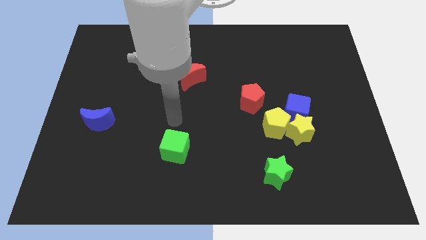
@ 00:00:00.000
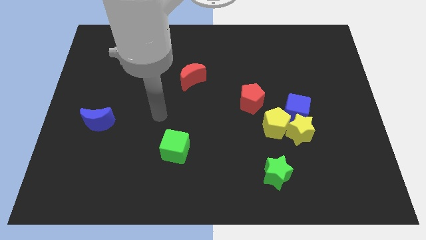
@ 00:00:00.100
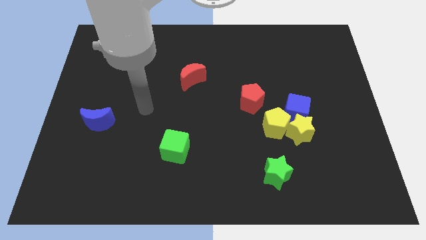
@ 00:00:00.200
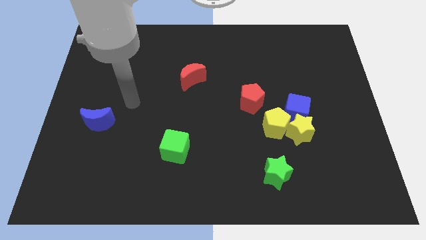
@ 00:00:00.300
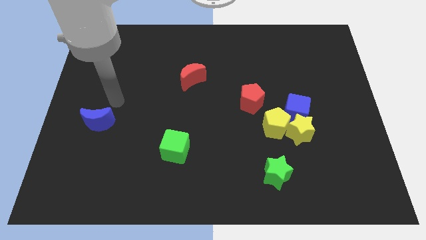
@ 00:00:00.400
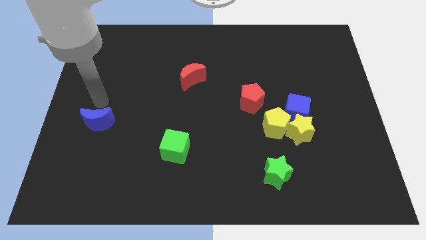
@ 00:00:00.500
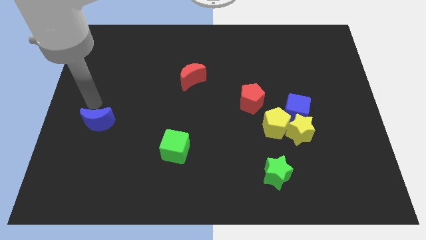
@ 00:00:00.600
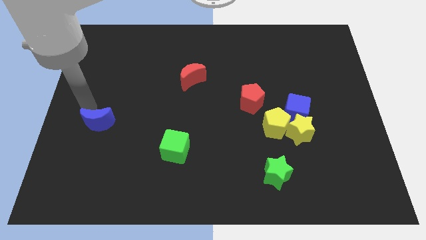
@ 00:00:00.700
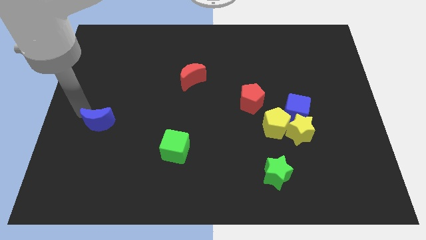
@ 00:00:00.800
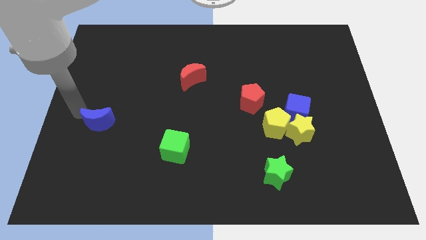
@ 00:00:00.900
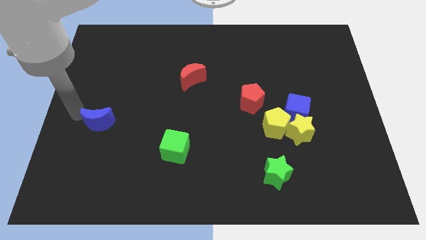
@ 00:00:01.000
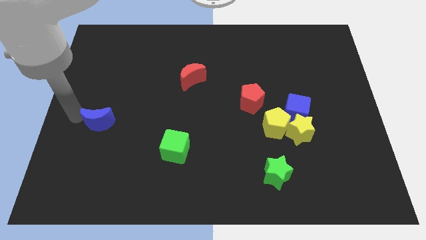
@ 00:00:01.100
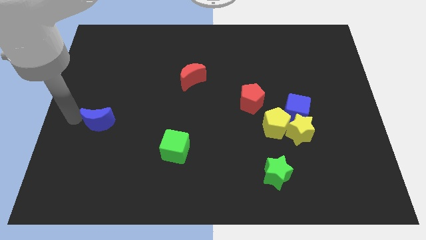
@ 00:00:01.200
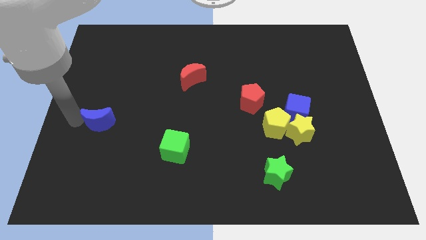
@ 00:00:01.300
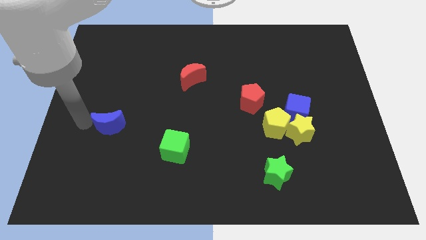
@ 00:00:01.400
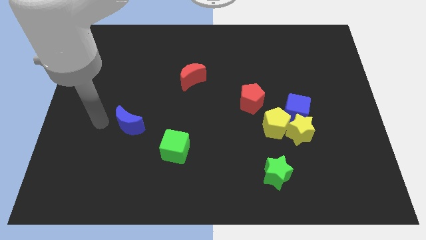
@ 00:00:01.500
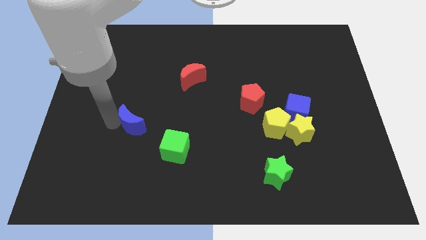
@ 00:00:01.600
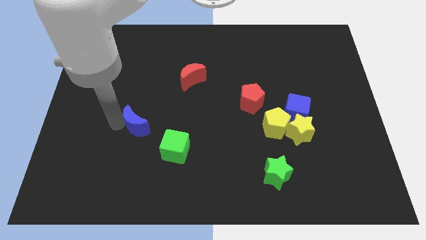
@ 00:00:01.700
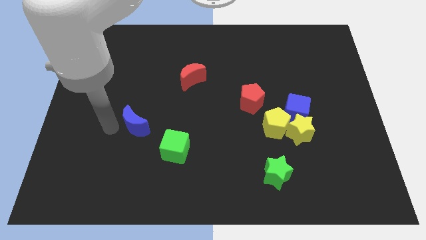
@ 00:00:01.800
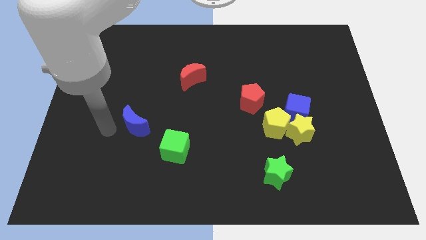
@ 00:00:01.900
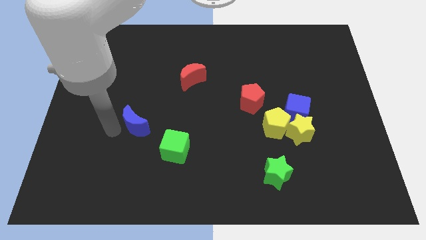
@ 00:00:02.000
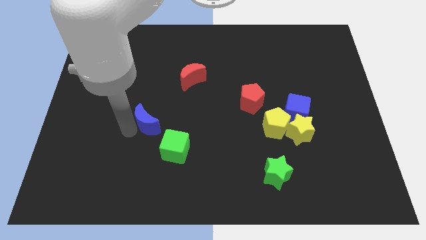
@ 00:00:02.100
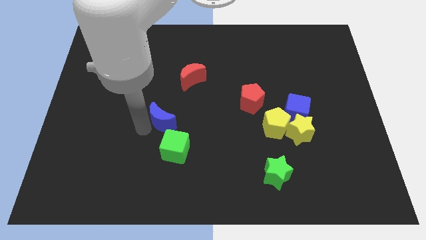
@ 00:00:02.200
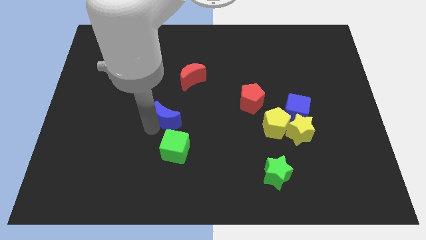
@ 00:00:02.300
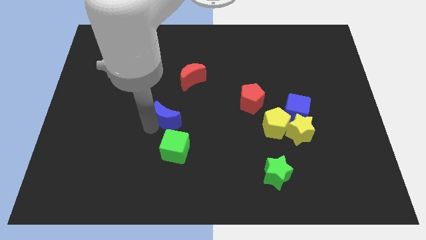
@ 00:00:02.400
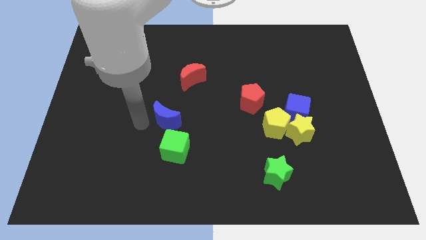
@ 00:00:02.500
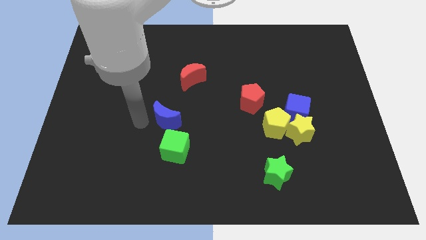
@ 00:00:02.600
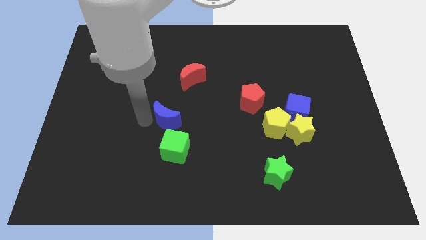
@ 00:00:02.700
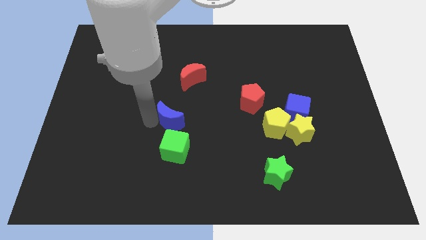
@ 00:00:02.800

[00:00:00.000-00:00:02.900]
slide the blue moon above the green cube

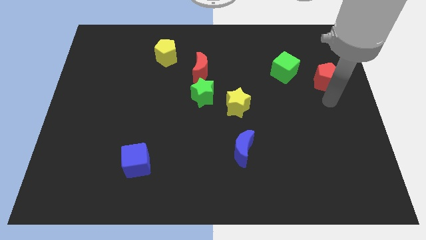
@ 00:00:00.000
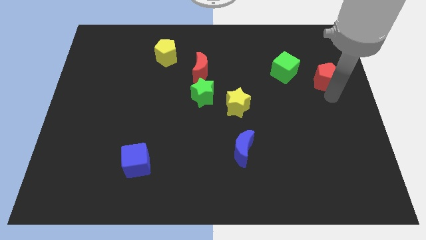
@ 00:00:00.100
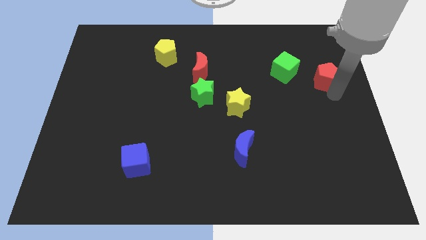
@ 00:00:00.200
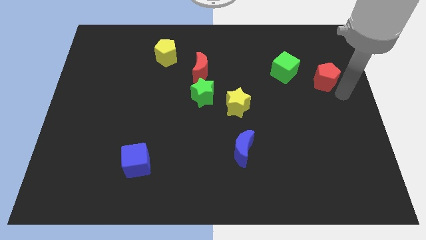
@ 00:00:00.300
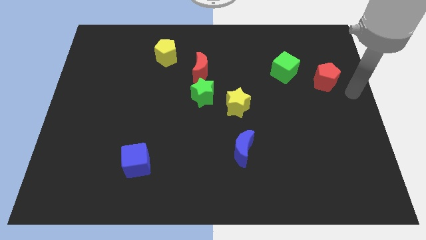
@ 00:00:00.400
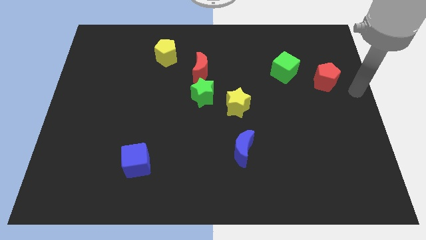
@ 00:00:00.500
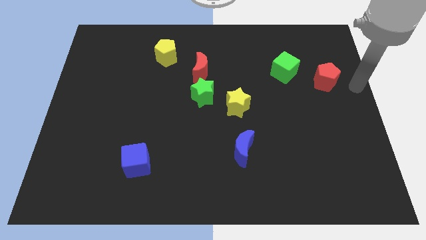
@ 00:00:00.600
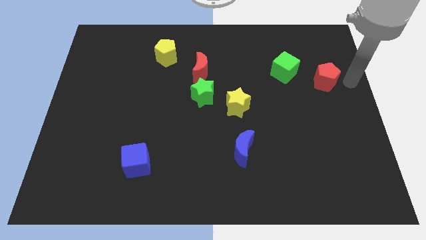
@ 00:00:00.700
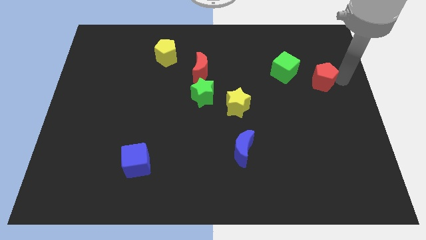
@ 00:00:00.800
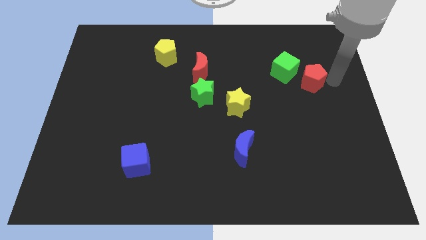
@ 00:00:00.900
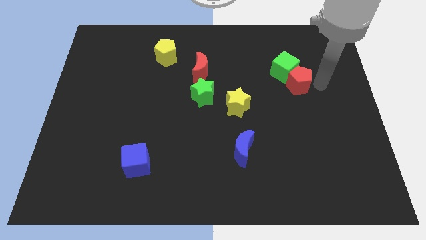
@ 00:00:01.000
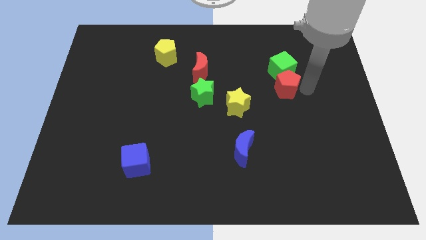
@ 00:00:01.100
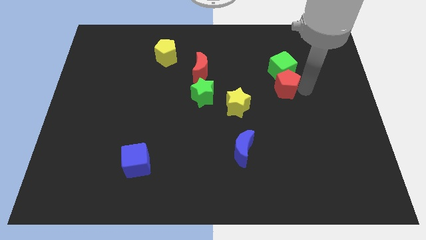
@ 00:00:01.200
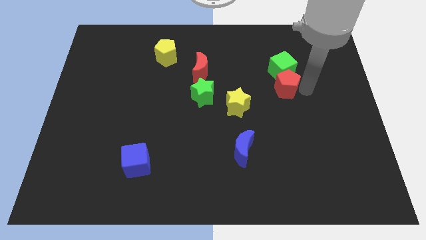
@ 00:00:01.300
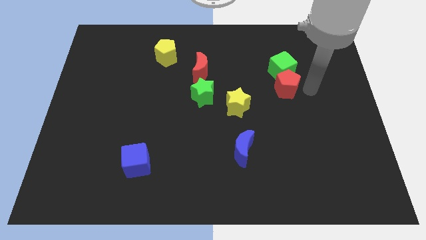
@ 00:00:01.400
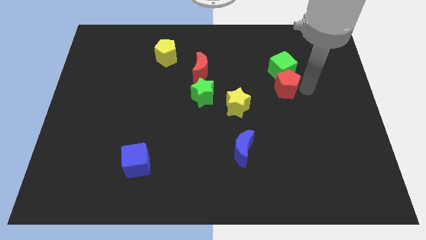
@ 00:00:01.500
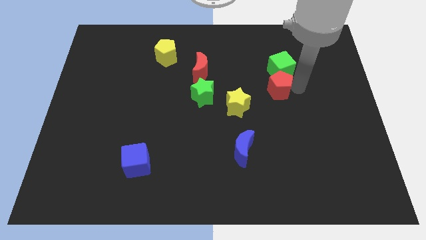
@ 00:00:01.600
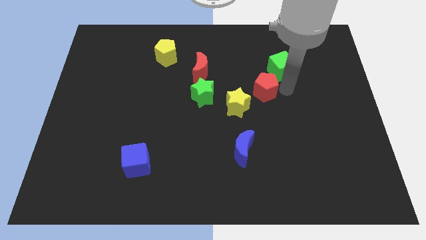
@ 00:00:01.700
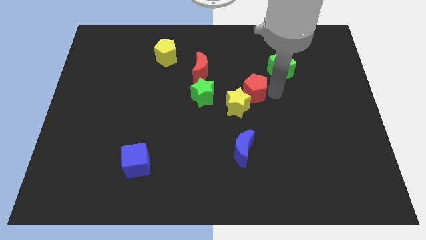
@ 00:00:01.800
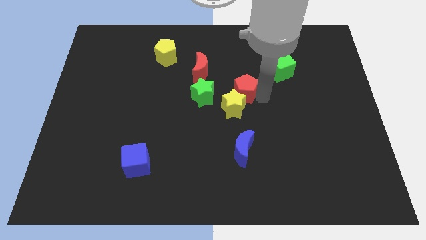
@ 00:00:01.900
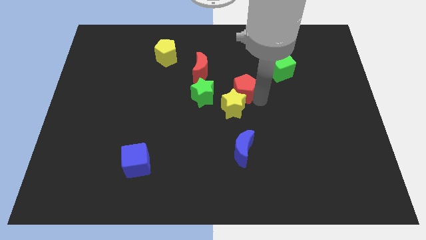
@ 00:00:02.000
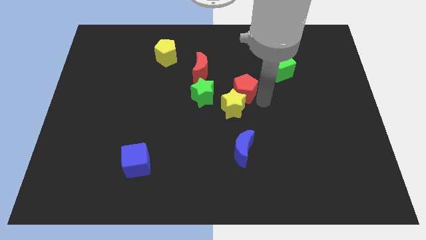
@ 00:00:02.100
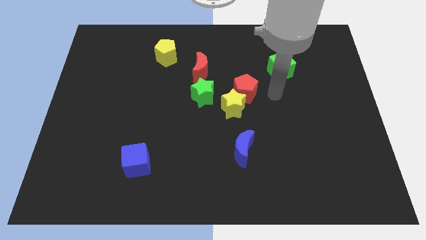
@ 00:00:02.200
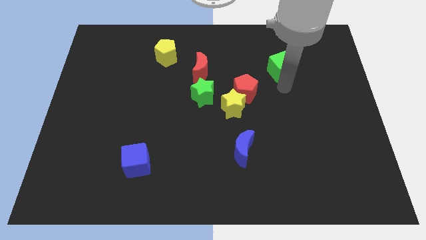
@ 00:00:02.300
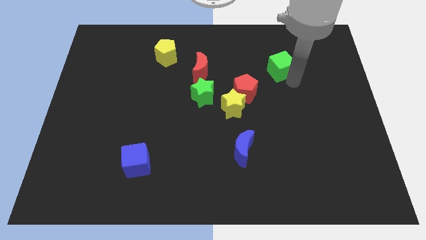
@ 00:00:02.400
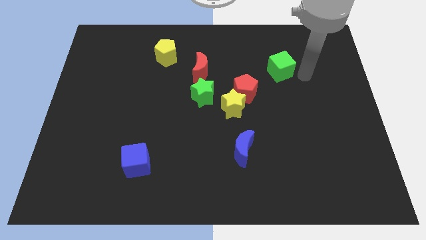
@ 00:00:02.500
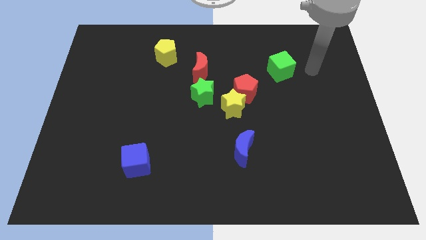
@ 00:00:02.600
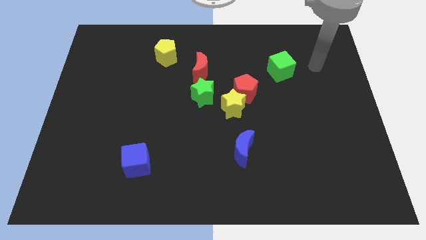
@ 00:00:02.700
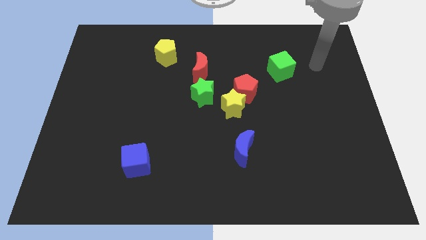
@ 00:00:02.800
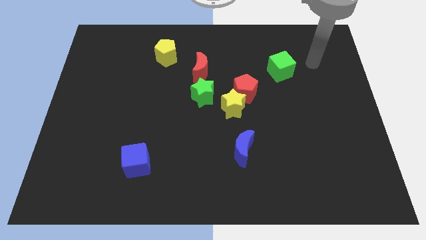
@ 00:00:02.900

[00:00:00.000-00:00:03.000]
push the red pentagon right to the green star

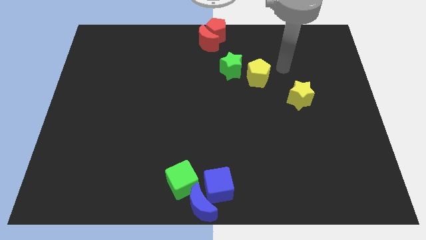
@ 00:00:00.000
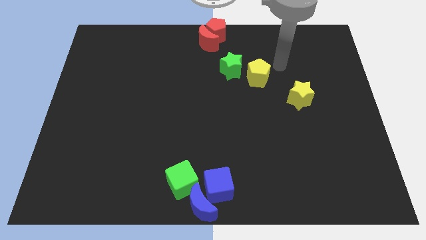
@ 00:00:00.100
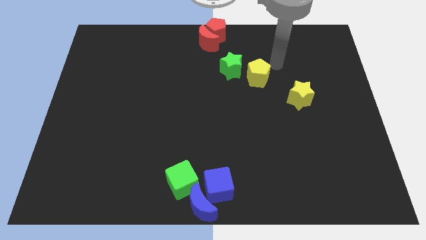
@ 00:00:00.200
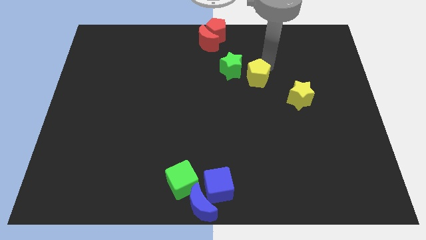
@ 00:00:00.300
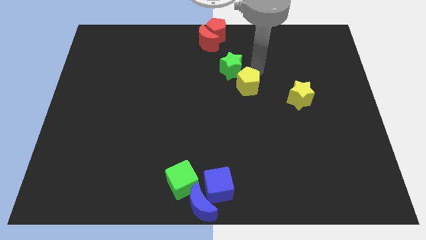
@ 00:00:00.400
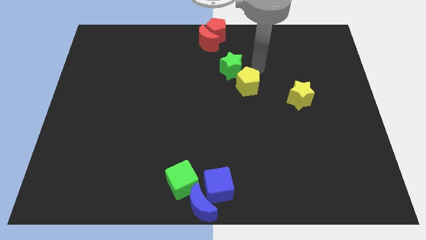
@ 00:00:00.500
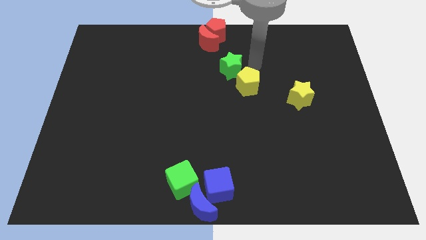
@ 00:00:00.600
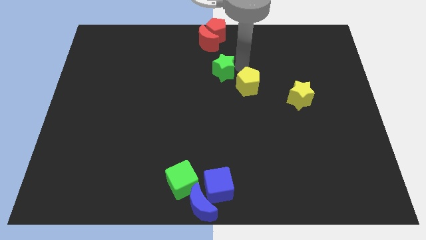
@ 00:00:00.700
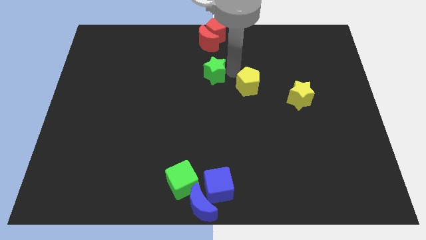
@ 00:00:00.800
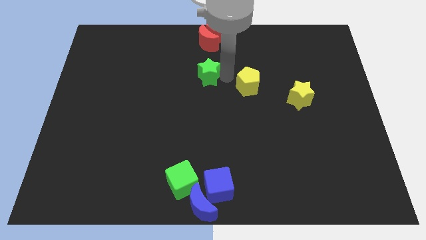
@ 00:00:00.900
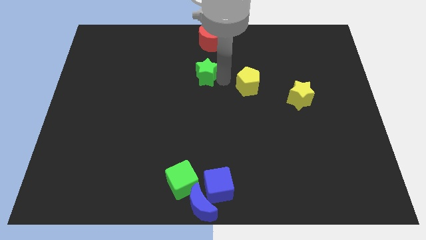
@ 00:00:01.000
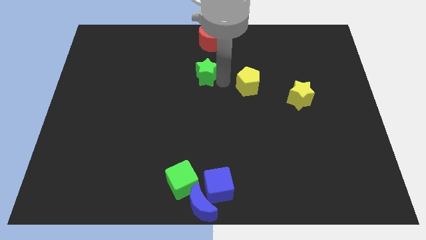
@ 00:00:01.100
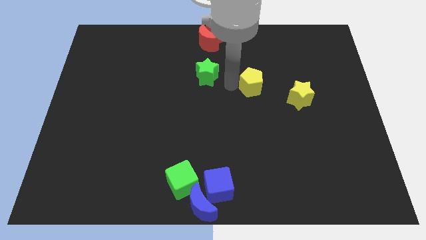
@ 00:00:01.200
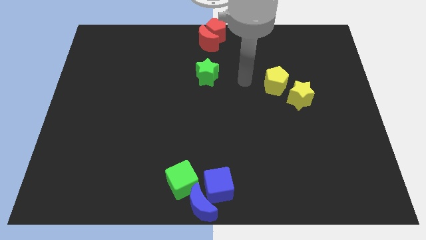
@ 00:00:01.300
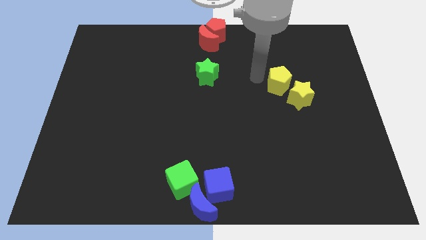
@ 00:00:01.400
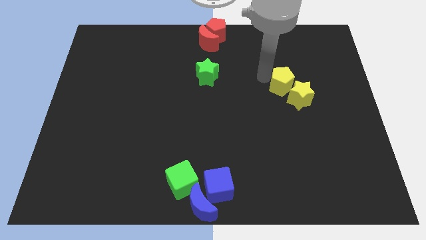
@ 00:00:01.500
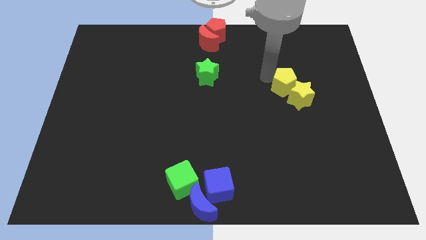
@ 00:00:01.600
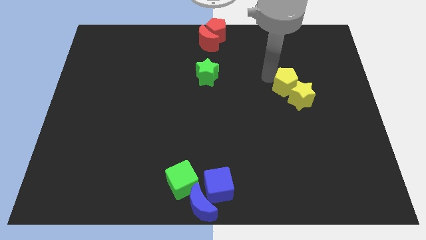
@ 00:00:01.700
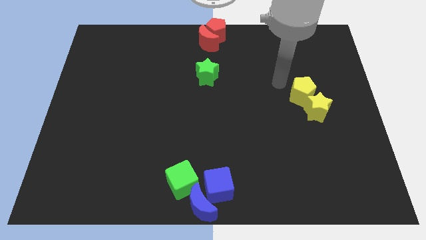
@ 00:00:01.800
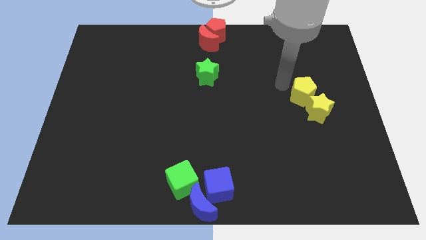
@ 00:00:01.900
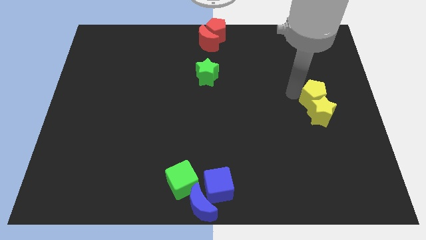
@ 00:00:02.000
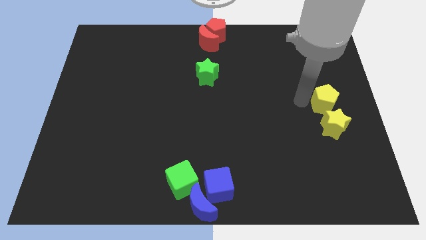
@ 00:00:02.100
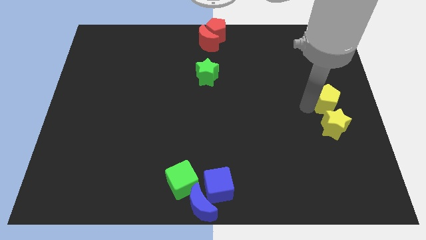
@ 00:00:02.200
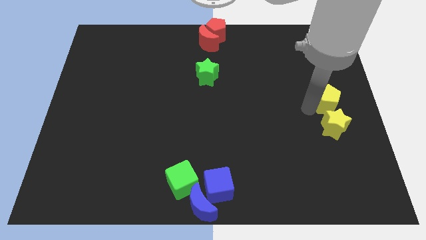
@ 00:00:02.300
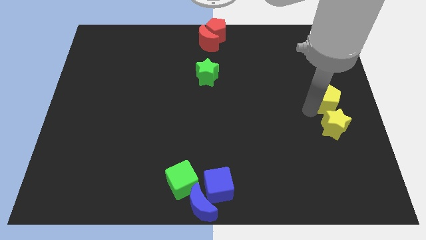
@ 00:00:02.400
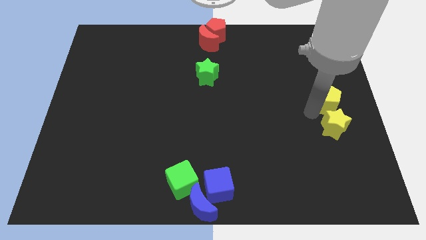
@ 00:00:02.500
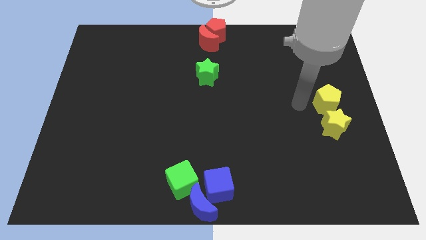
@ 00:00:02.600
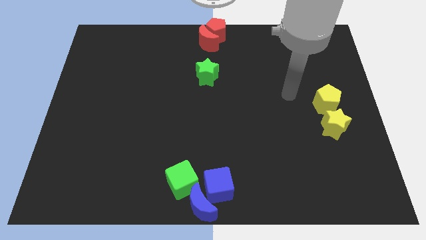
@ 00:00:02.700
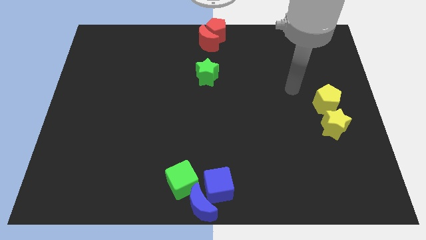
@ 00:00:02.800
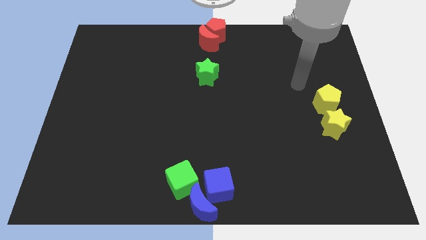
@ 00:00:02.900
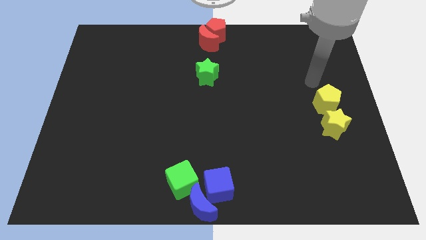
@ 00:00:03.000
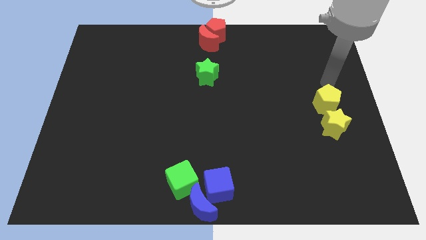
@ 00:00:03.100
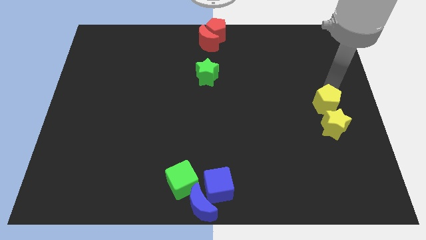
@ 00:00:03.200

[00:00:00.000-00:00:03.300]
separate green star and yellow pentagon
